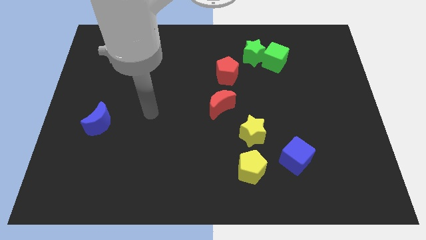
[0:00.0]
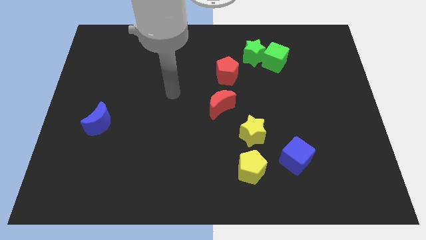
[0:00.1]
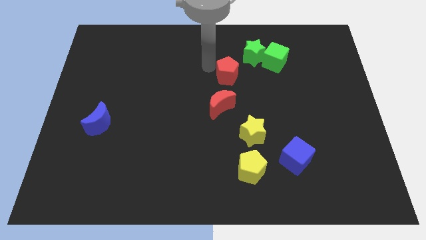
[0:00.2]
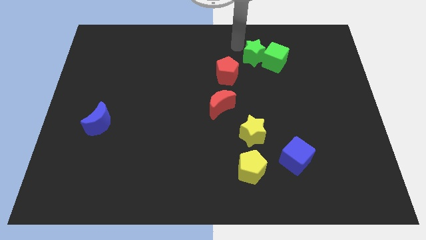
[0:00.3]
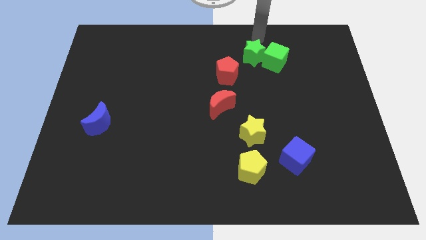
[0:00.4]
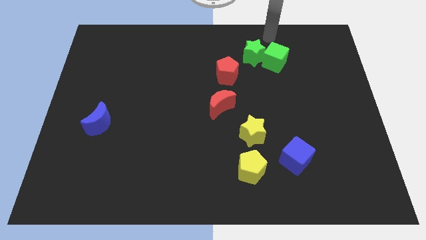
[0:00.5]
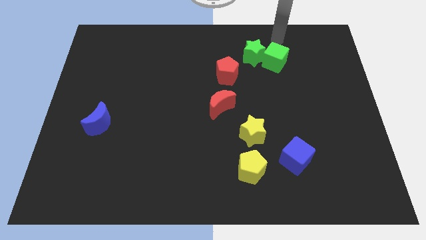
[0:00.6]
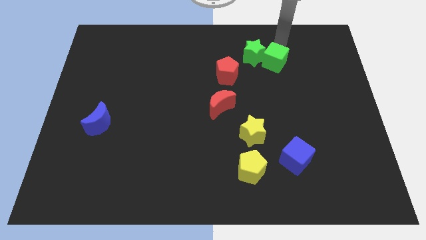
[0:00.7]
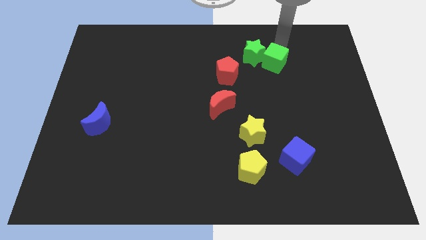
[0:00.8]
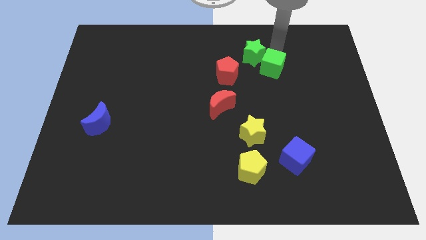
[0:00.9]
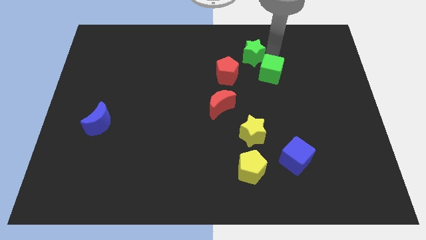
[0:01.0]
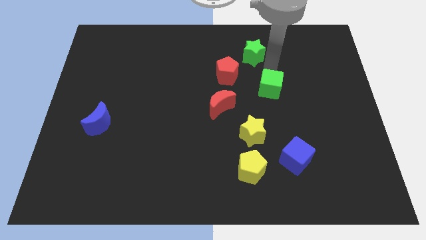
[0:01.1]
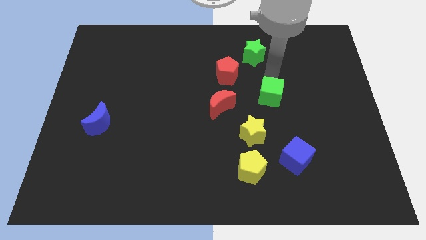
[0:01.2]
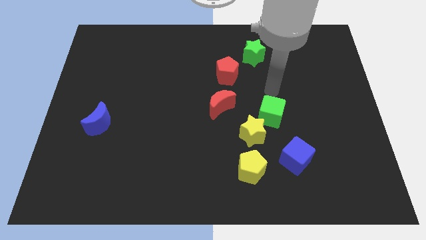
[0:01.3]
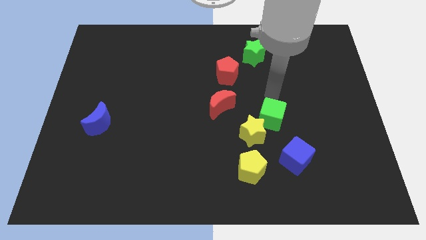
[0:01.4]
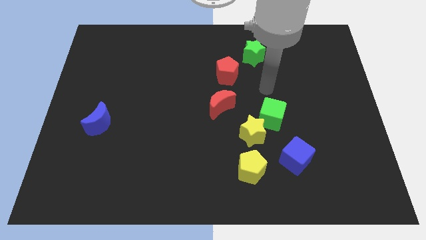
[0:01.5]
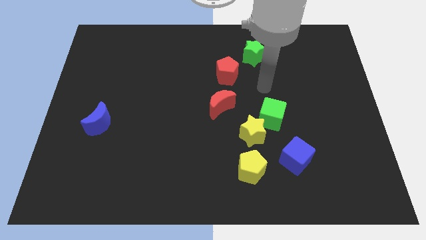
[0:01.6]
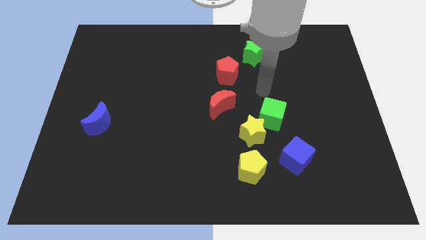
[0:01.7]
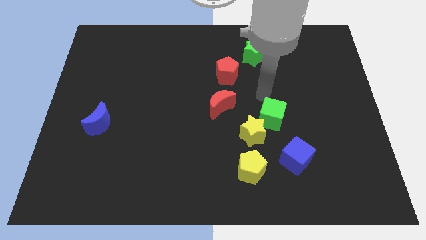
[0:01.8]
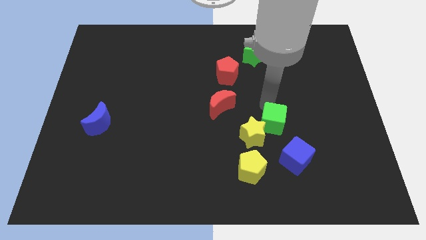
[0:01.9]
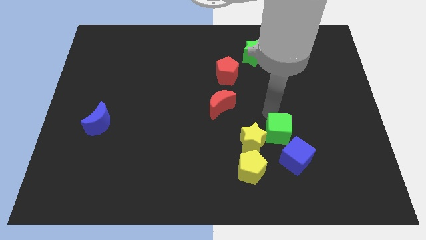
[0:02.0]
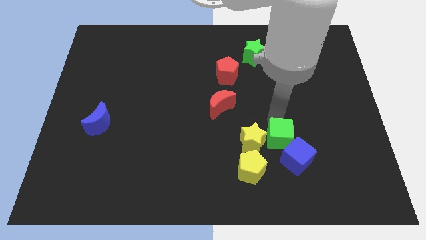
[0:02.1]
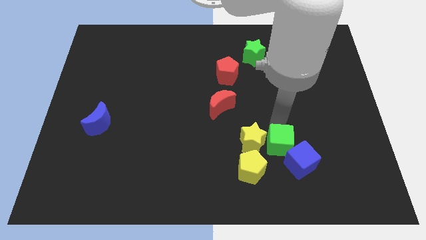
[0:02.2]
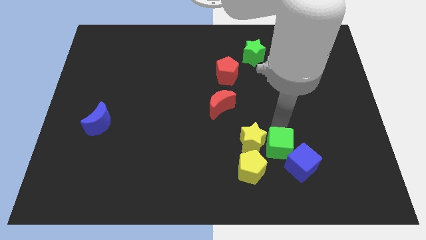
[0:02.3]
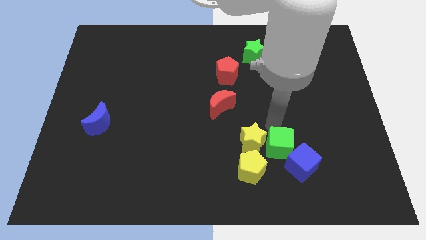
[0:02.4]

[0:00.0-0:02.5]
push the green cube to the blue cube

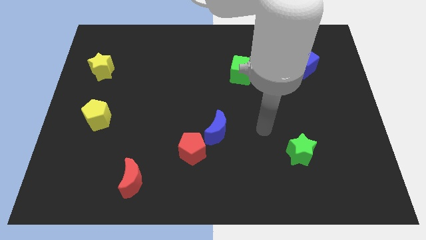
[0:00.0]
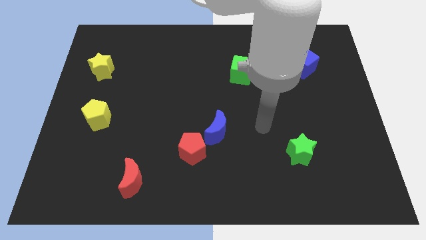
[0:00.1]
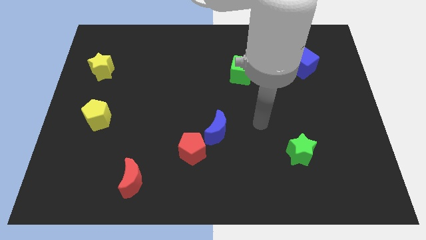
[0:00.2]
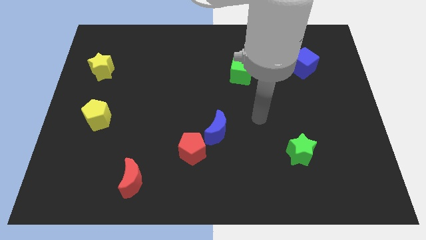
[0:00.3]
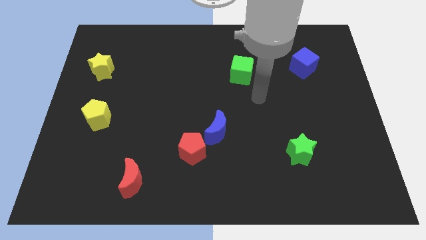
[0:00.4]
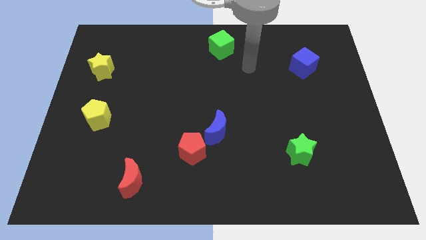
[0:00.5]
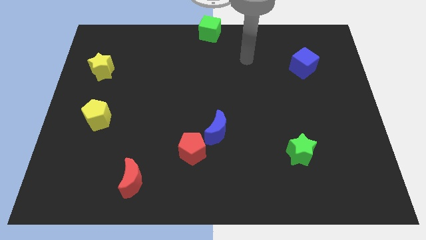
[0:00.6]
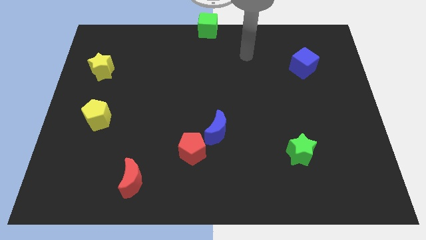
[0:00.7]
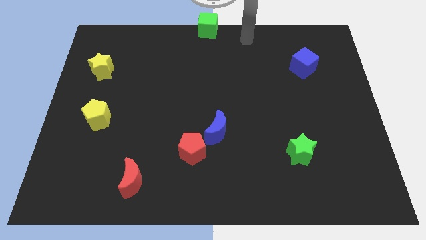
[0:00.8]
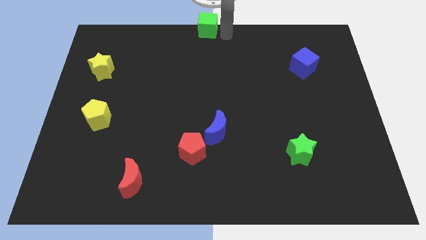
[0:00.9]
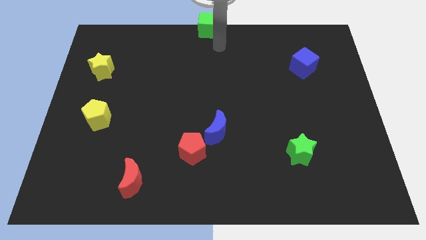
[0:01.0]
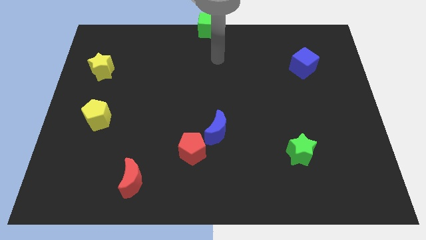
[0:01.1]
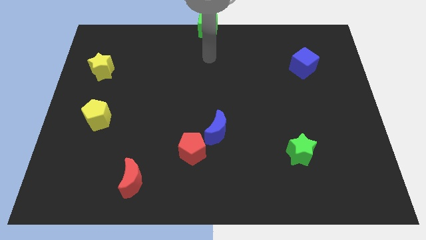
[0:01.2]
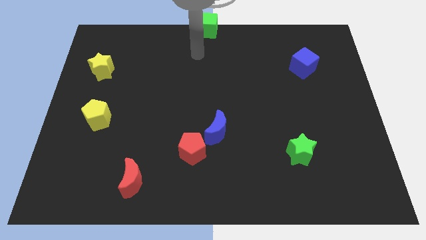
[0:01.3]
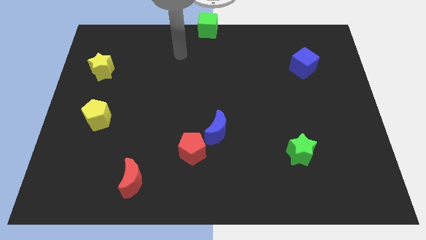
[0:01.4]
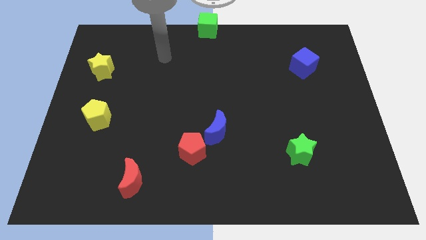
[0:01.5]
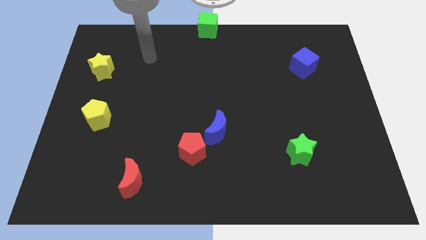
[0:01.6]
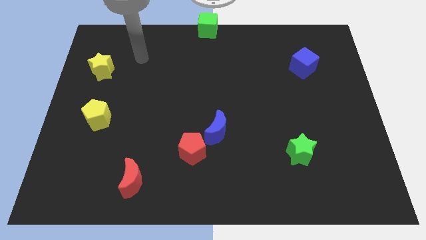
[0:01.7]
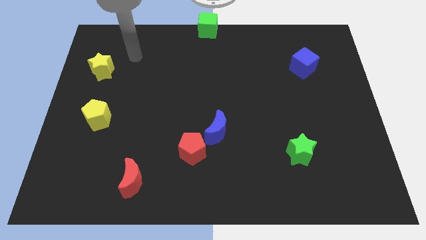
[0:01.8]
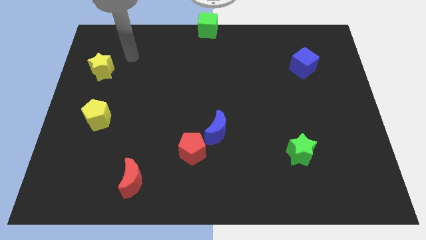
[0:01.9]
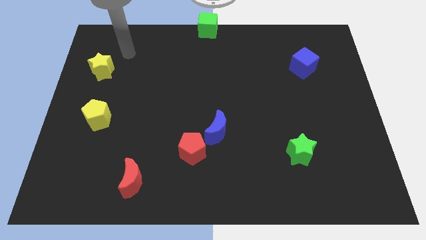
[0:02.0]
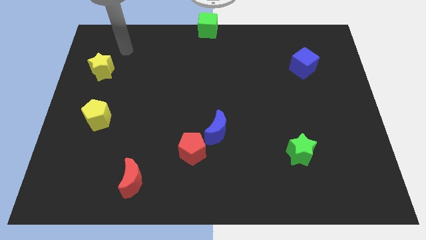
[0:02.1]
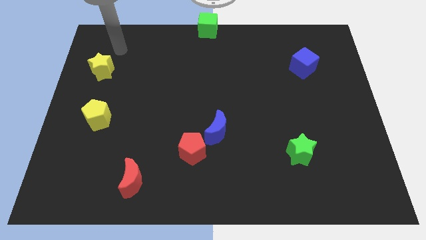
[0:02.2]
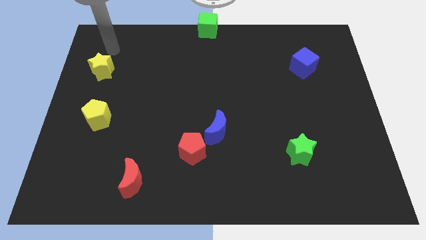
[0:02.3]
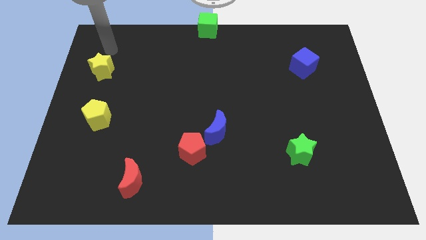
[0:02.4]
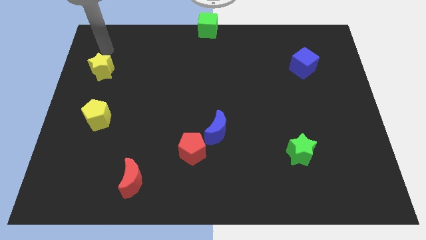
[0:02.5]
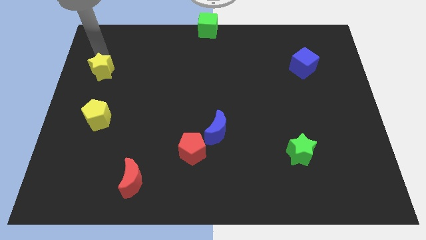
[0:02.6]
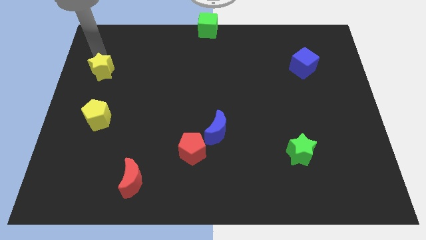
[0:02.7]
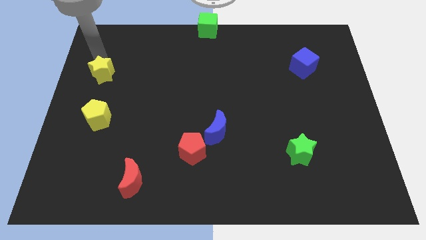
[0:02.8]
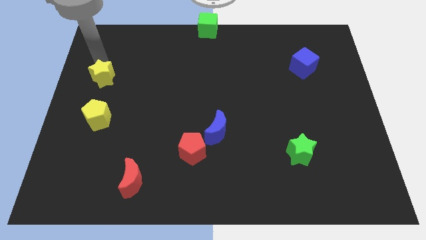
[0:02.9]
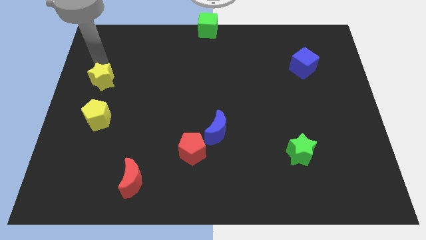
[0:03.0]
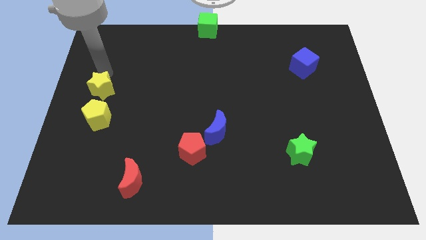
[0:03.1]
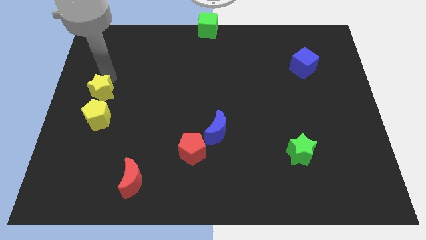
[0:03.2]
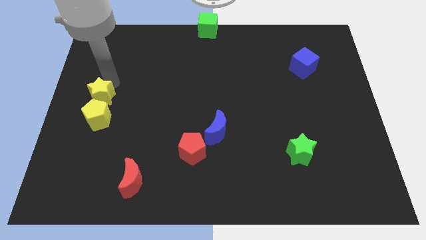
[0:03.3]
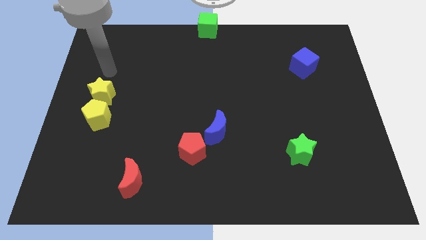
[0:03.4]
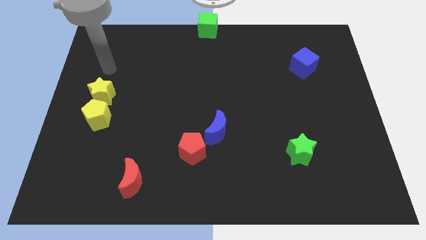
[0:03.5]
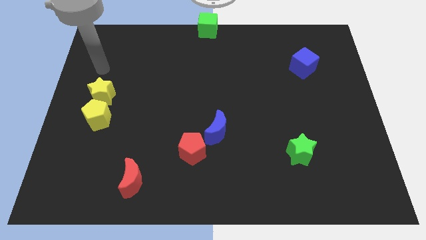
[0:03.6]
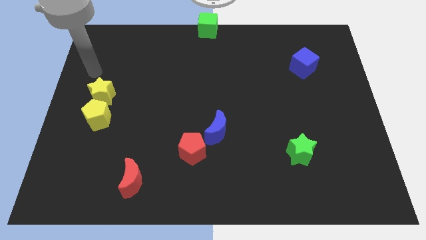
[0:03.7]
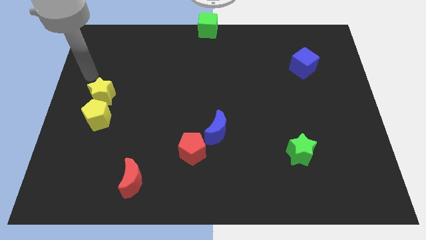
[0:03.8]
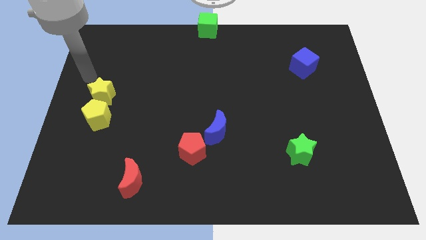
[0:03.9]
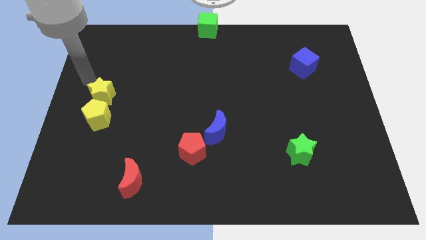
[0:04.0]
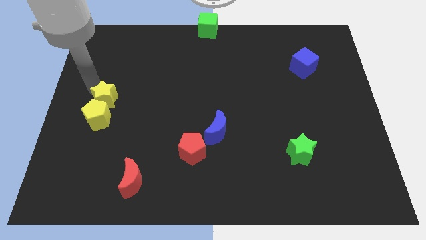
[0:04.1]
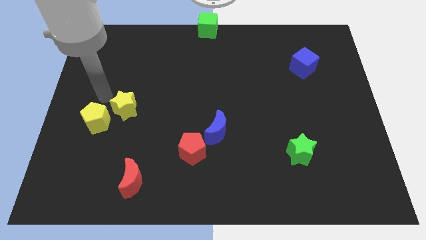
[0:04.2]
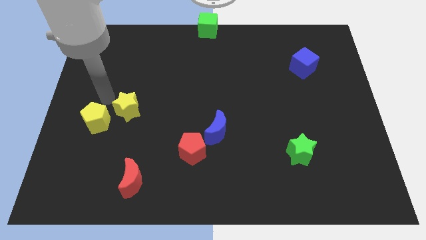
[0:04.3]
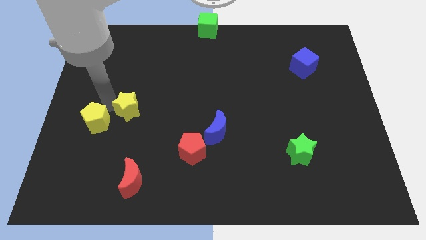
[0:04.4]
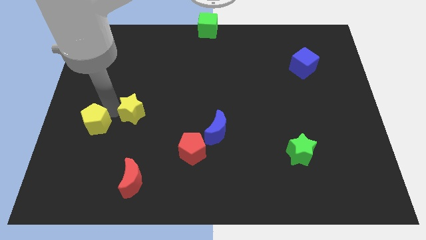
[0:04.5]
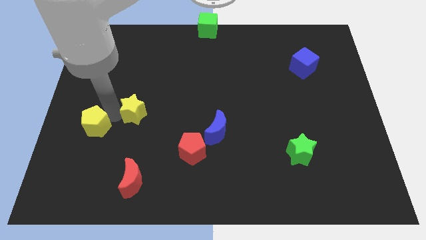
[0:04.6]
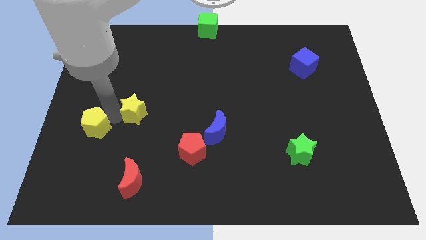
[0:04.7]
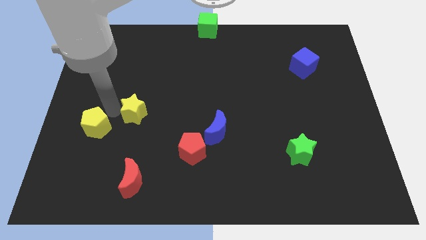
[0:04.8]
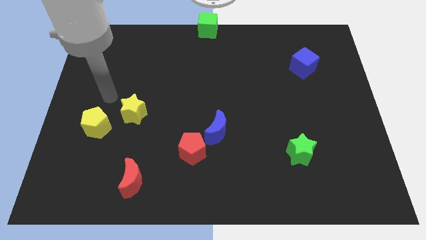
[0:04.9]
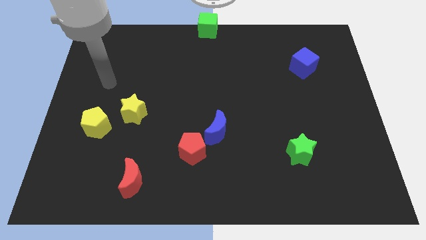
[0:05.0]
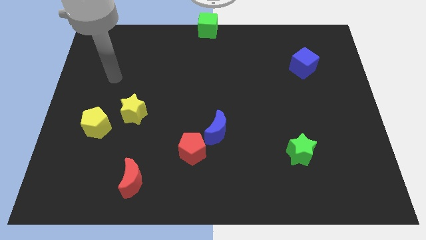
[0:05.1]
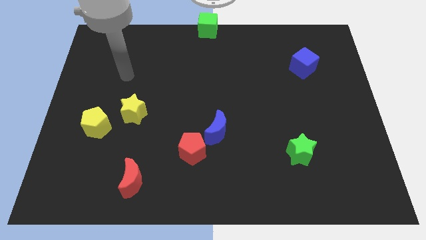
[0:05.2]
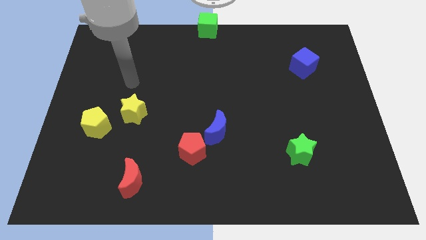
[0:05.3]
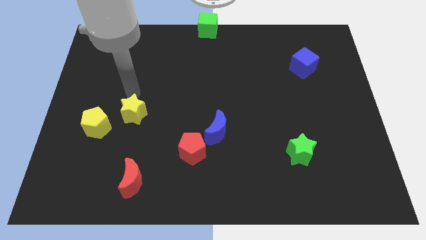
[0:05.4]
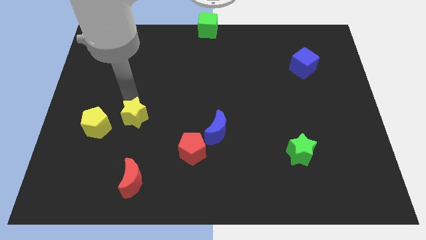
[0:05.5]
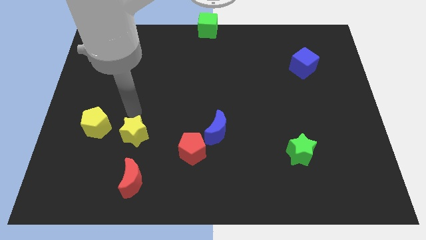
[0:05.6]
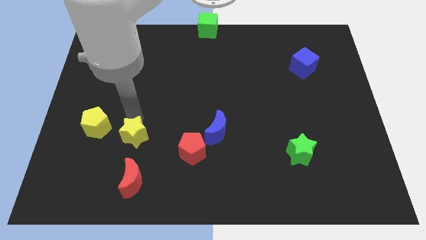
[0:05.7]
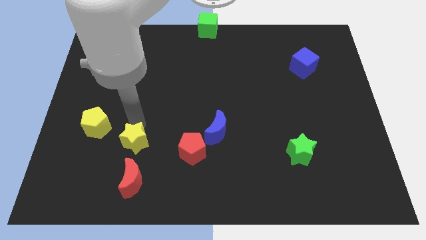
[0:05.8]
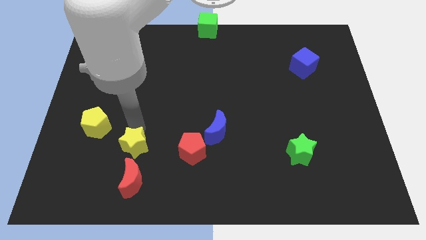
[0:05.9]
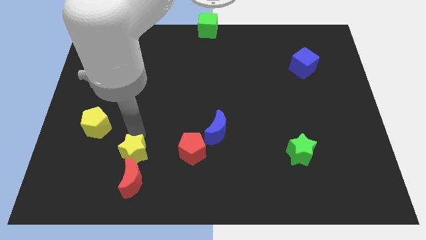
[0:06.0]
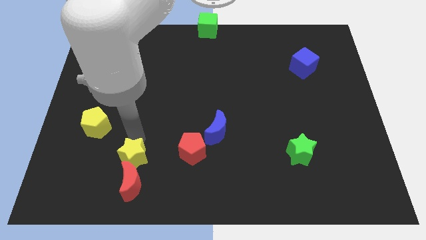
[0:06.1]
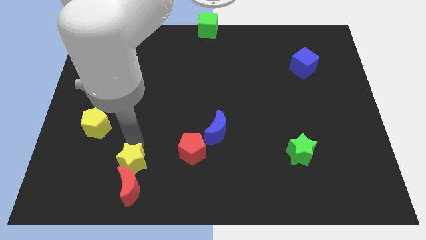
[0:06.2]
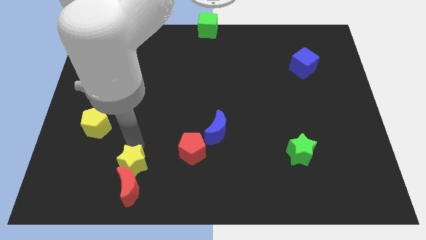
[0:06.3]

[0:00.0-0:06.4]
put the yellow star close to the red moon
